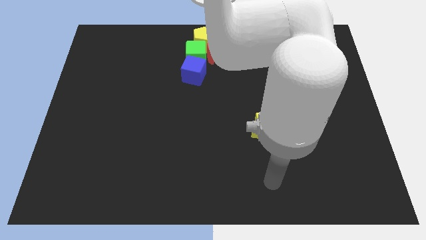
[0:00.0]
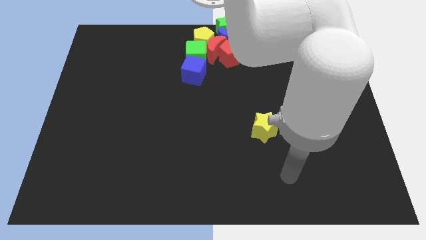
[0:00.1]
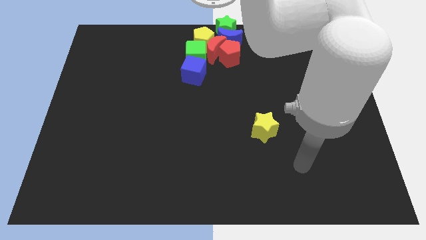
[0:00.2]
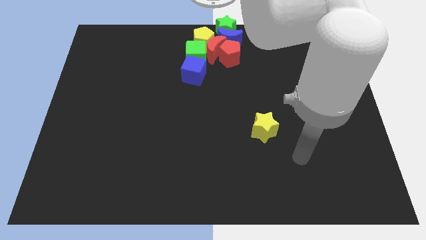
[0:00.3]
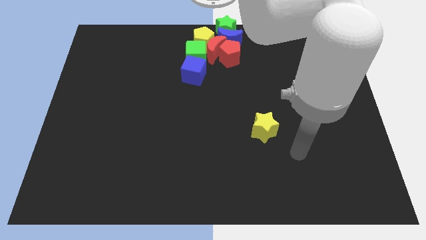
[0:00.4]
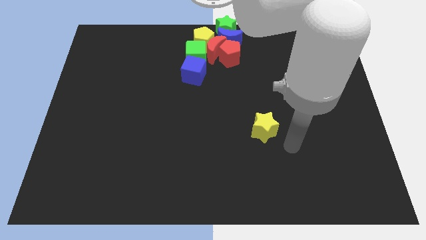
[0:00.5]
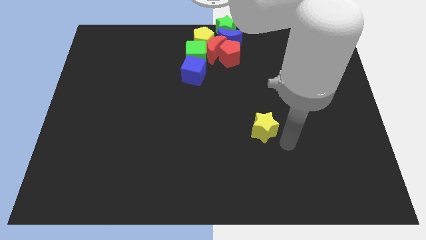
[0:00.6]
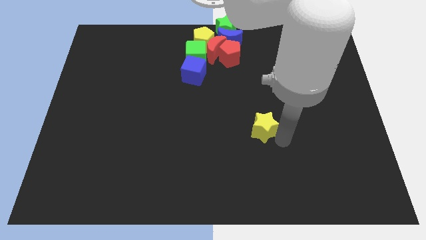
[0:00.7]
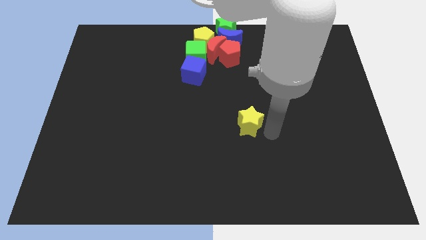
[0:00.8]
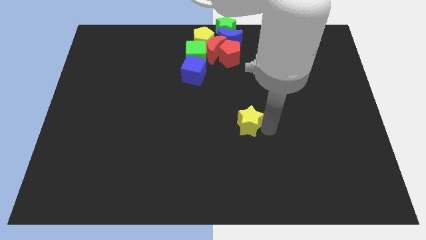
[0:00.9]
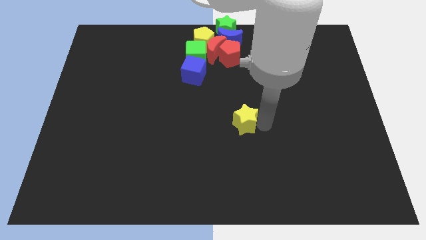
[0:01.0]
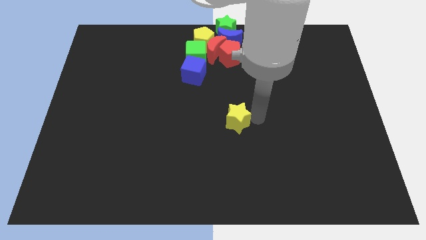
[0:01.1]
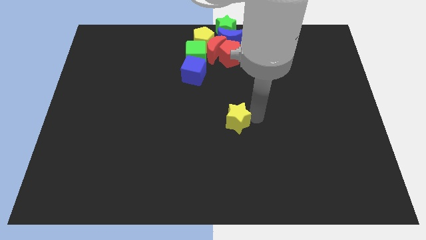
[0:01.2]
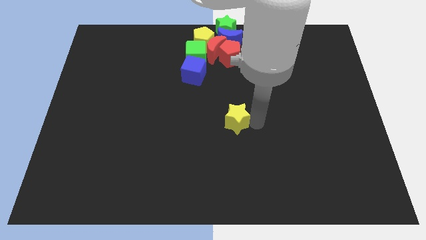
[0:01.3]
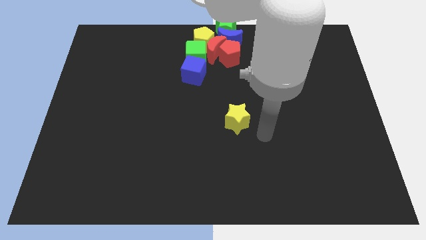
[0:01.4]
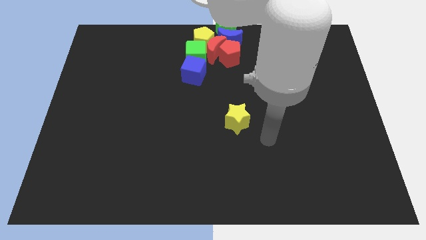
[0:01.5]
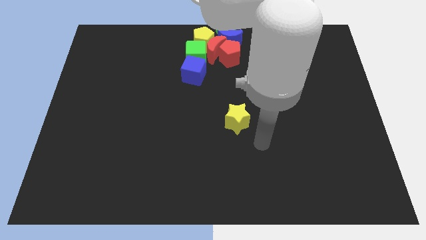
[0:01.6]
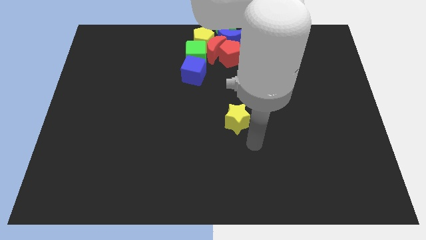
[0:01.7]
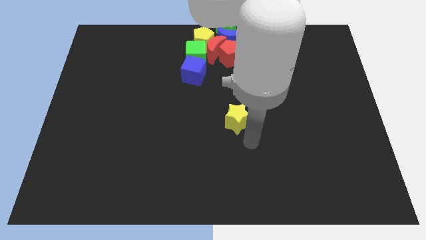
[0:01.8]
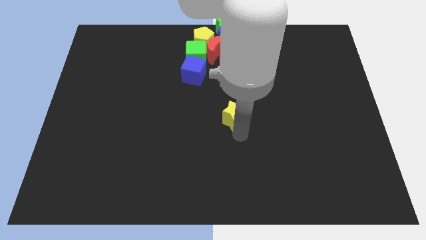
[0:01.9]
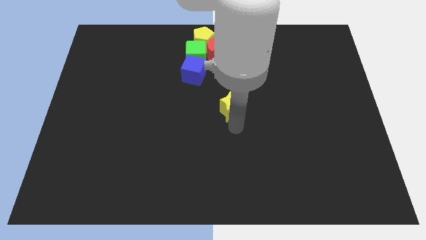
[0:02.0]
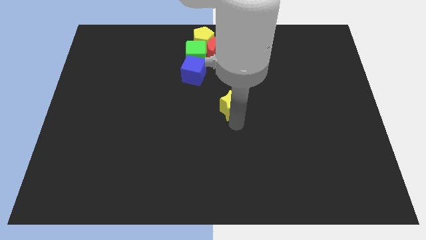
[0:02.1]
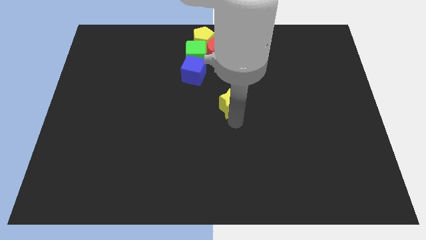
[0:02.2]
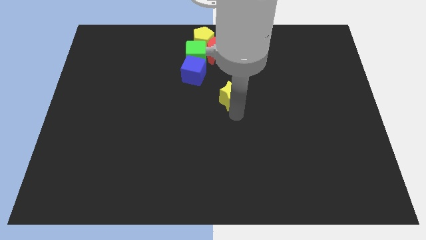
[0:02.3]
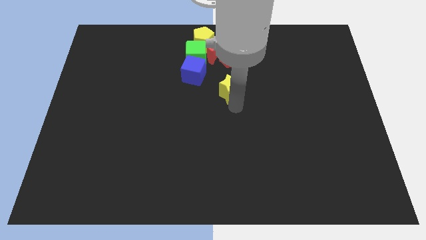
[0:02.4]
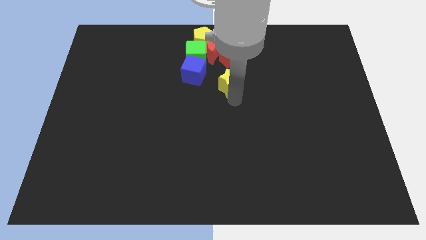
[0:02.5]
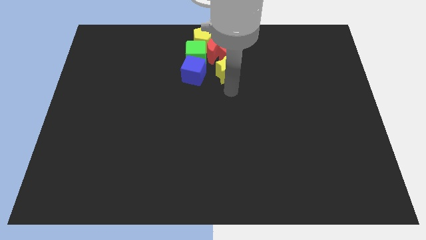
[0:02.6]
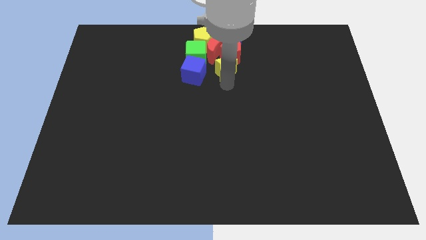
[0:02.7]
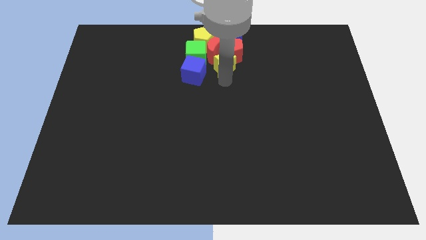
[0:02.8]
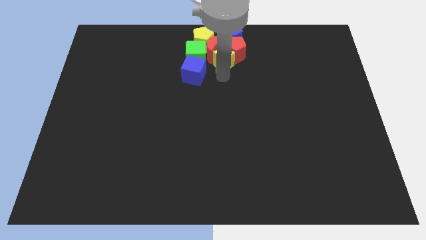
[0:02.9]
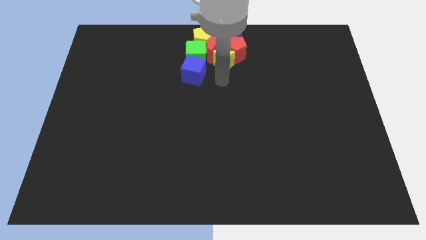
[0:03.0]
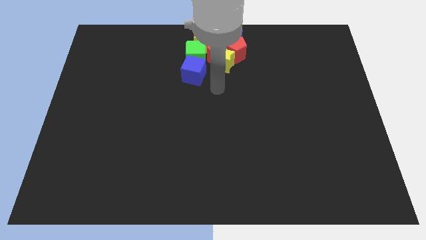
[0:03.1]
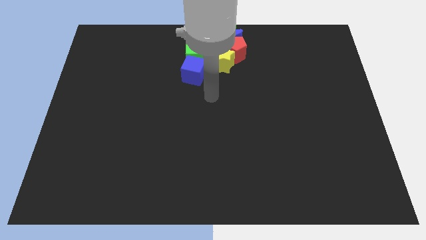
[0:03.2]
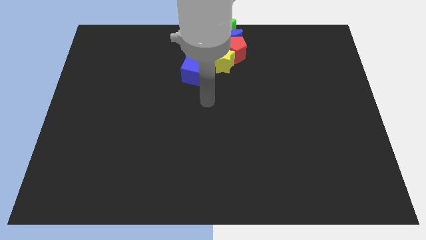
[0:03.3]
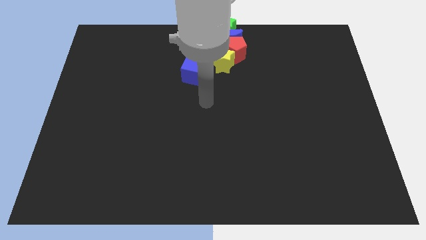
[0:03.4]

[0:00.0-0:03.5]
push yellow star close to the red pentagon and red moon

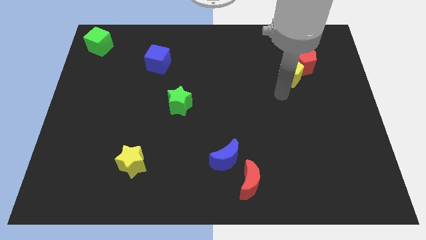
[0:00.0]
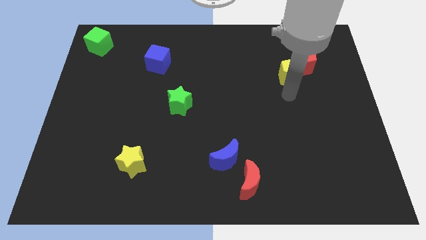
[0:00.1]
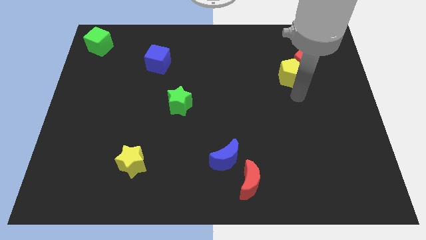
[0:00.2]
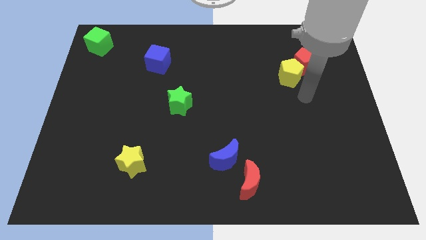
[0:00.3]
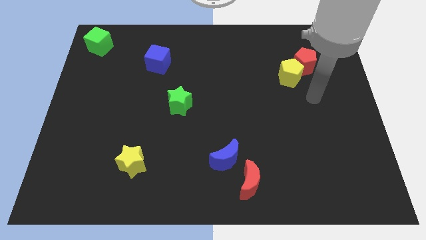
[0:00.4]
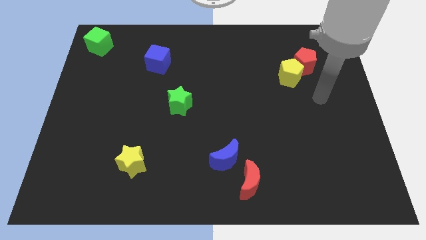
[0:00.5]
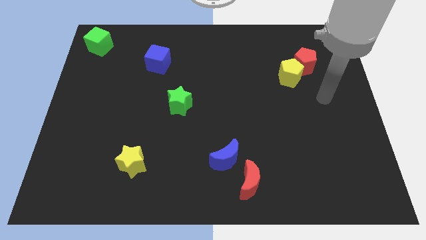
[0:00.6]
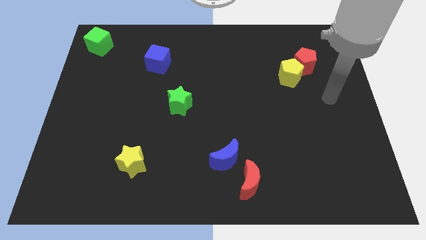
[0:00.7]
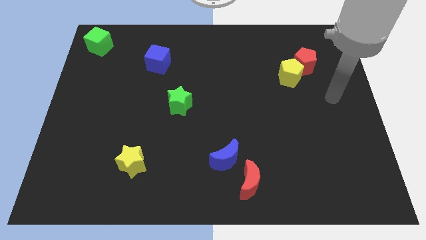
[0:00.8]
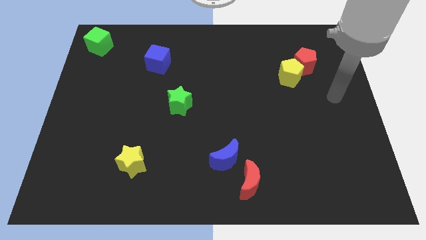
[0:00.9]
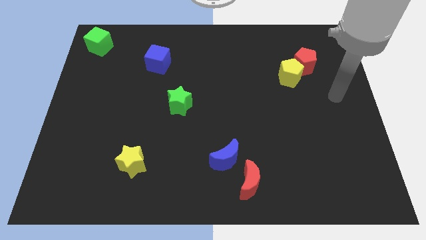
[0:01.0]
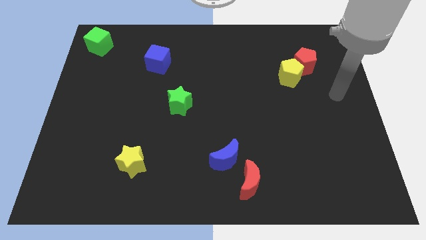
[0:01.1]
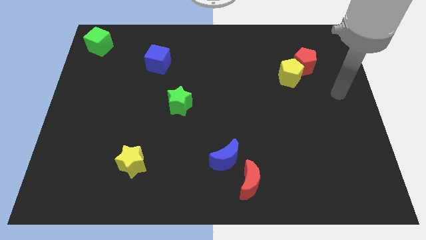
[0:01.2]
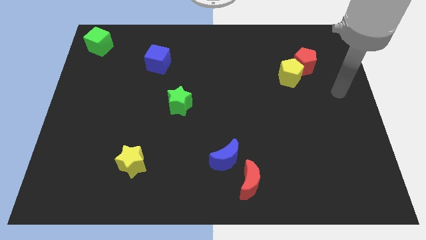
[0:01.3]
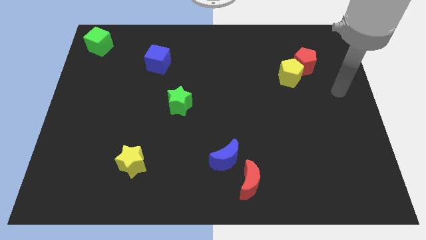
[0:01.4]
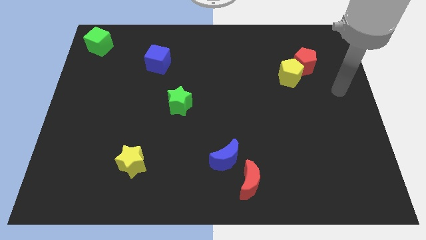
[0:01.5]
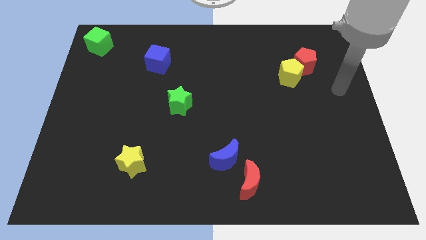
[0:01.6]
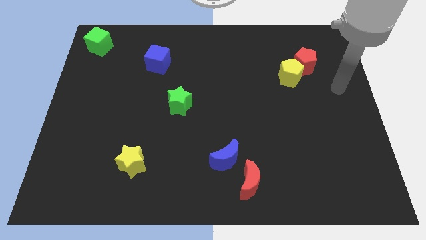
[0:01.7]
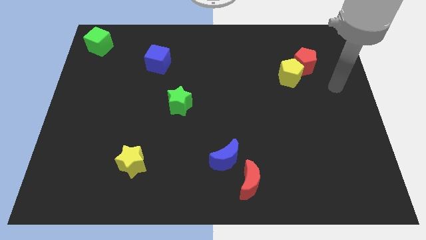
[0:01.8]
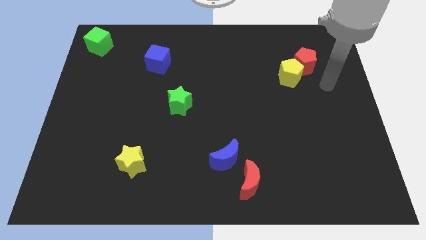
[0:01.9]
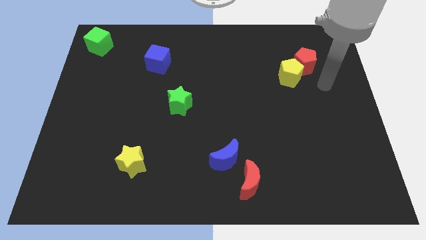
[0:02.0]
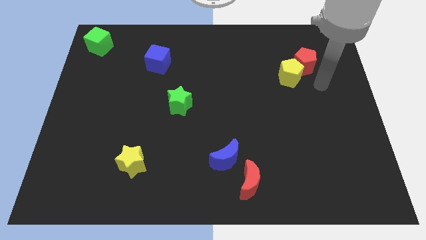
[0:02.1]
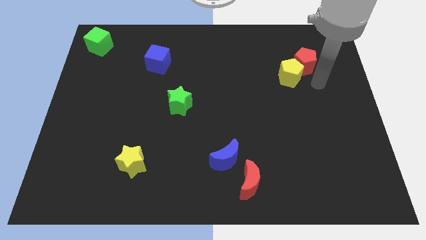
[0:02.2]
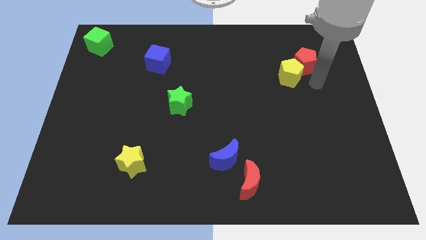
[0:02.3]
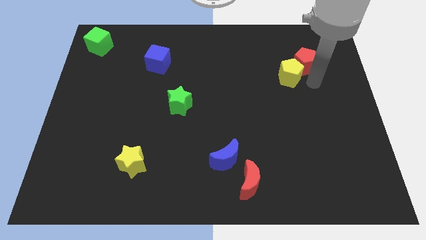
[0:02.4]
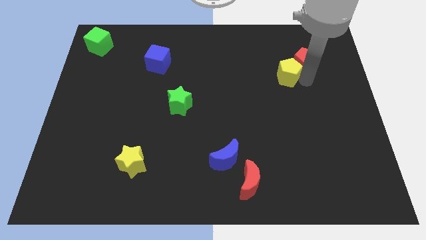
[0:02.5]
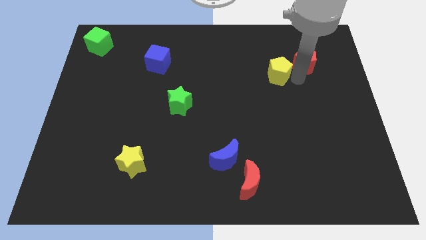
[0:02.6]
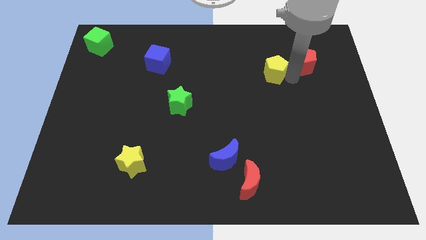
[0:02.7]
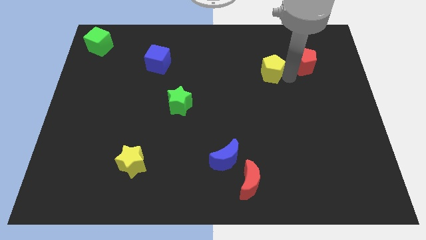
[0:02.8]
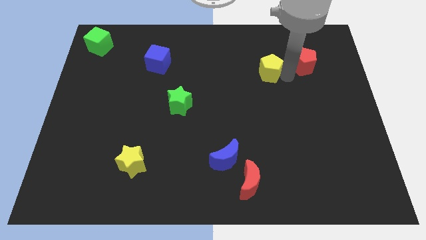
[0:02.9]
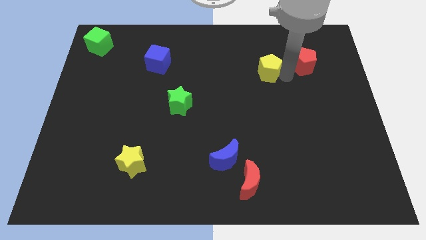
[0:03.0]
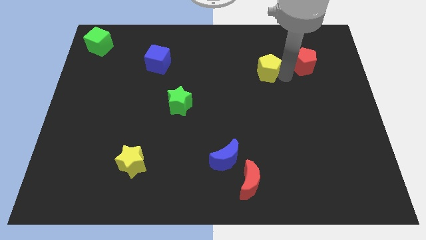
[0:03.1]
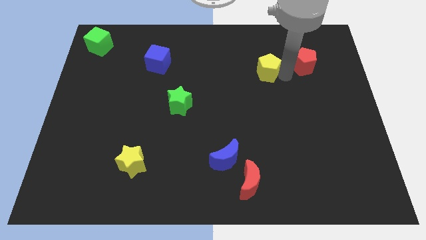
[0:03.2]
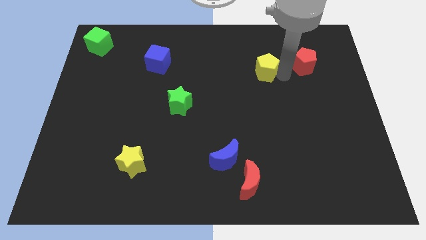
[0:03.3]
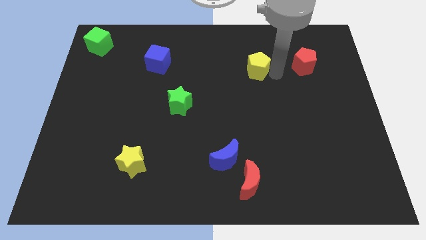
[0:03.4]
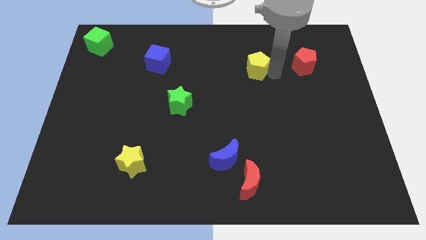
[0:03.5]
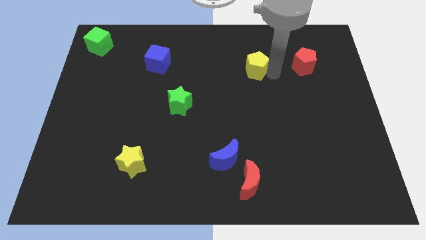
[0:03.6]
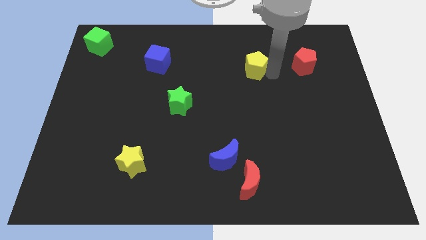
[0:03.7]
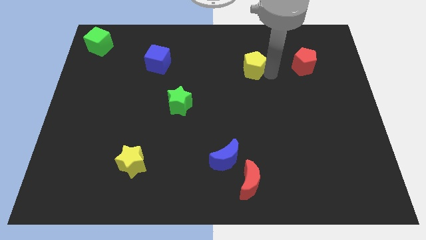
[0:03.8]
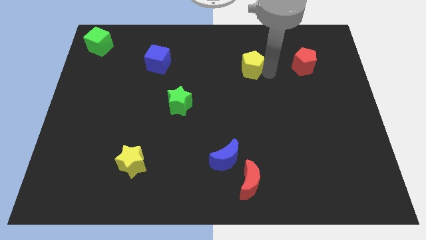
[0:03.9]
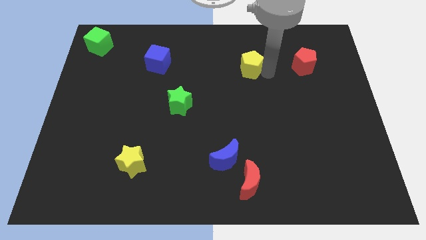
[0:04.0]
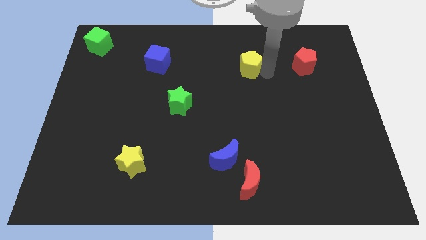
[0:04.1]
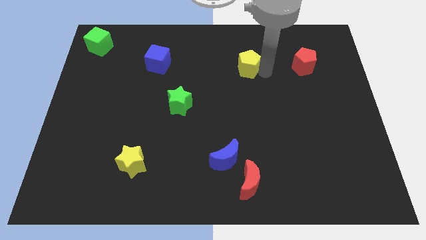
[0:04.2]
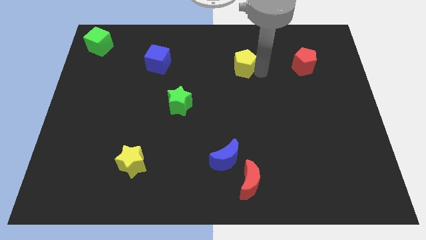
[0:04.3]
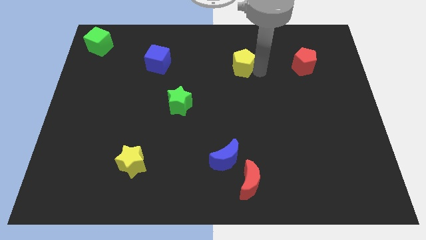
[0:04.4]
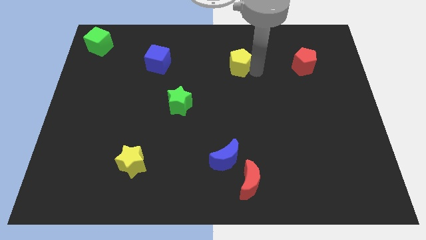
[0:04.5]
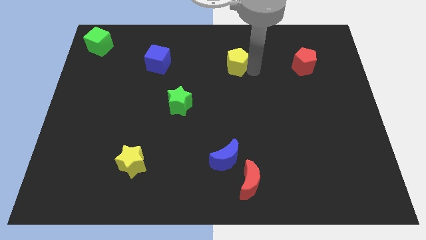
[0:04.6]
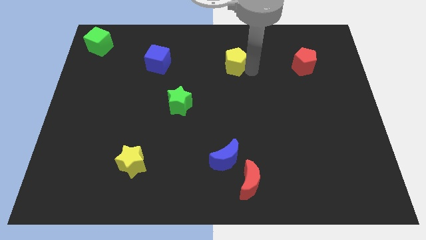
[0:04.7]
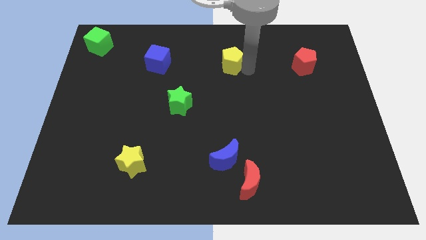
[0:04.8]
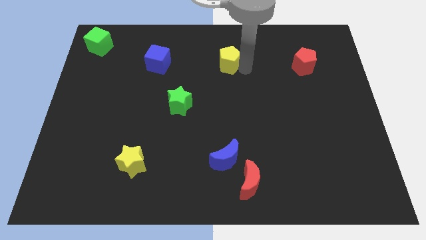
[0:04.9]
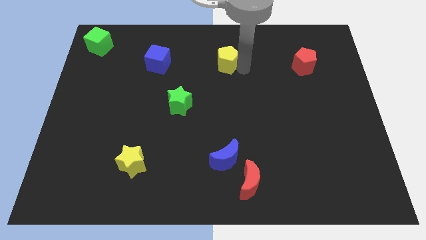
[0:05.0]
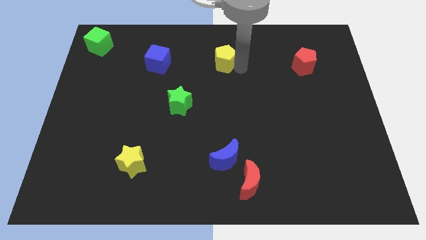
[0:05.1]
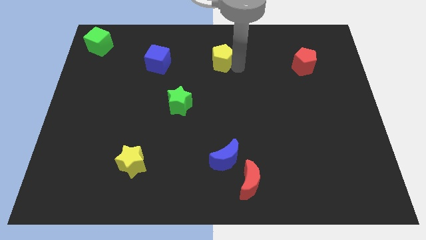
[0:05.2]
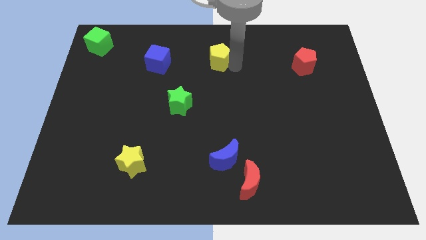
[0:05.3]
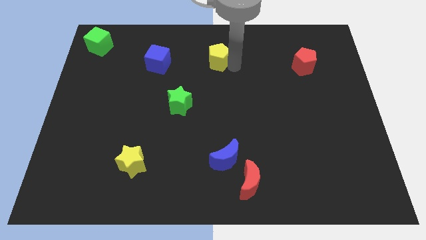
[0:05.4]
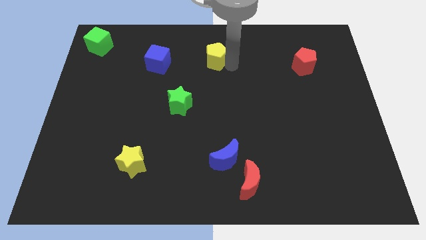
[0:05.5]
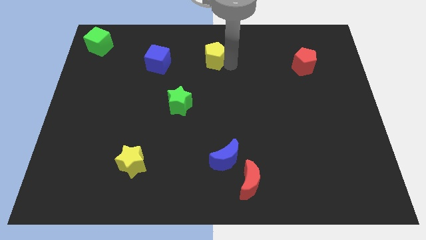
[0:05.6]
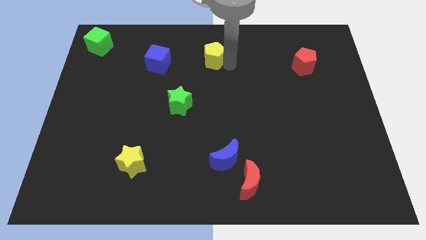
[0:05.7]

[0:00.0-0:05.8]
place the yellow pentagon in between the red pentagon and blue cube
